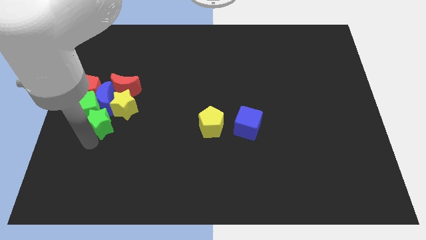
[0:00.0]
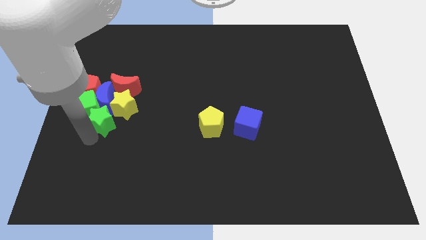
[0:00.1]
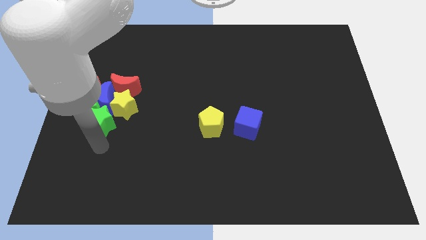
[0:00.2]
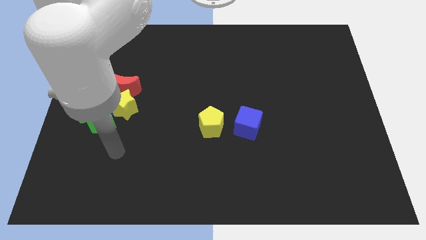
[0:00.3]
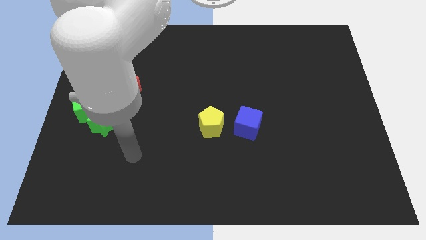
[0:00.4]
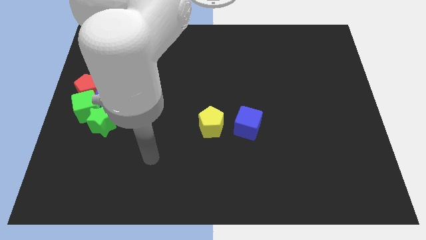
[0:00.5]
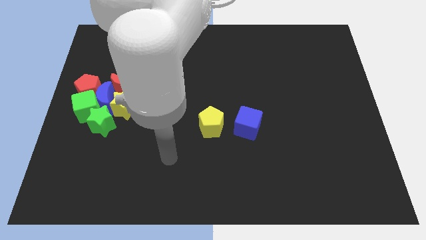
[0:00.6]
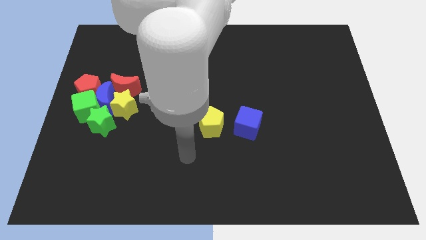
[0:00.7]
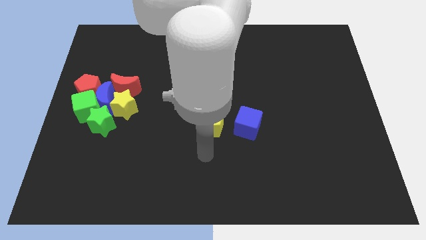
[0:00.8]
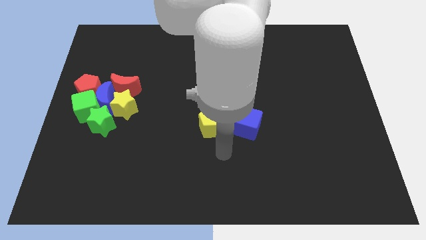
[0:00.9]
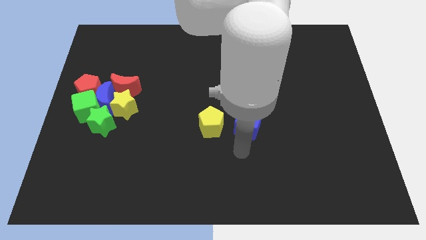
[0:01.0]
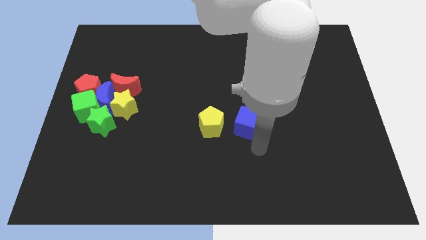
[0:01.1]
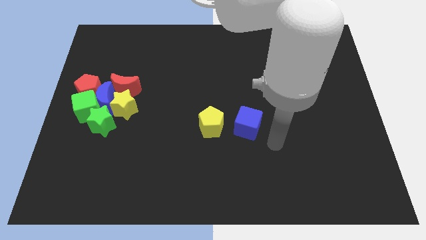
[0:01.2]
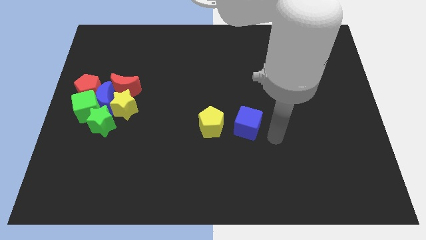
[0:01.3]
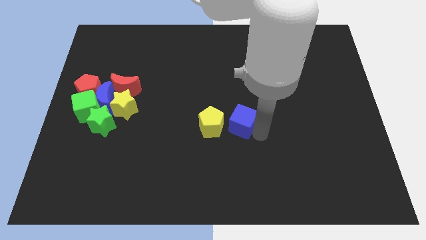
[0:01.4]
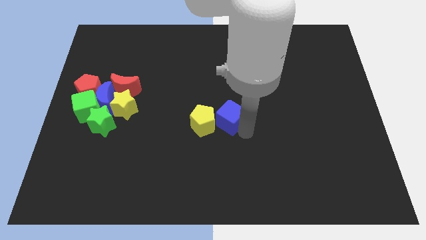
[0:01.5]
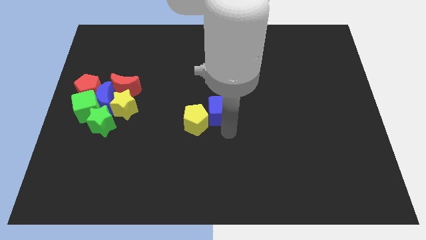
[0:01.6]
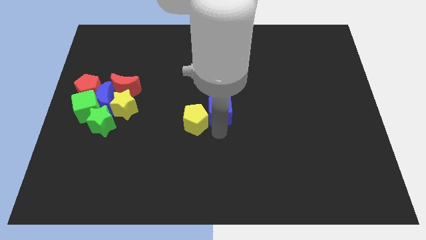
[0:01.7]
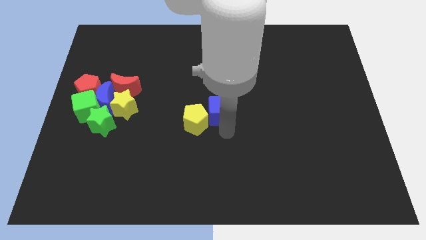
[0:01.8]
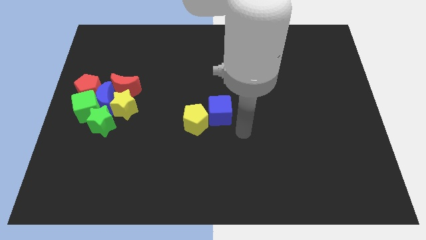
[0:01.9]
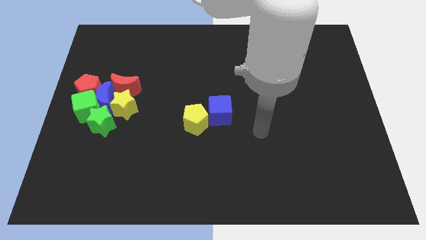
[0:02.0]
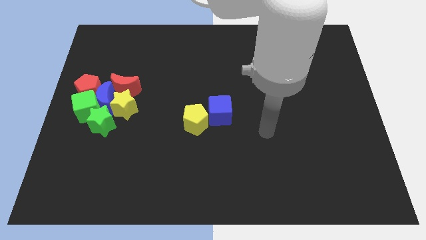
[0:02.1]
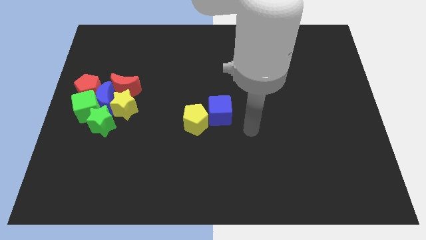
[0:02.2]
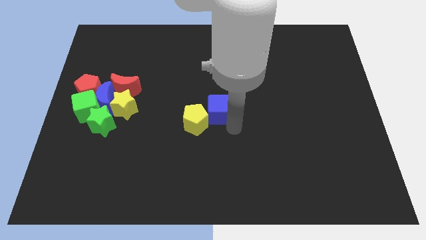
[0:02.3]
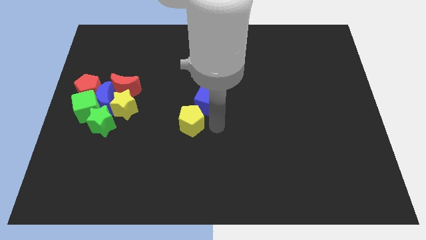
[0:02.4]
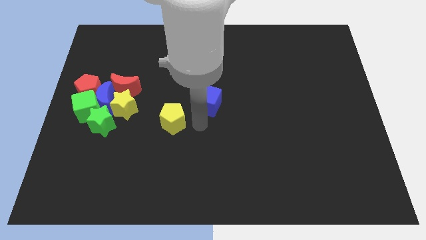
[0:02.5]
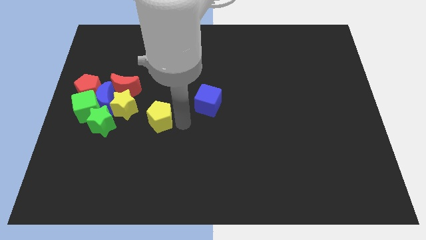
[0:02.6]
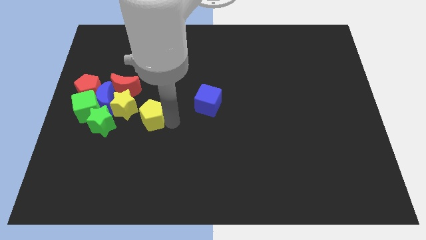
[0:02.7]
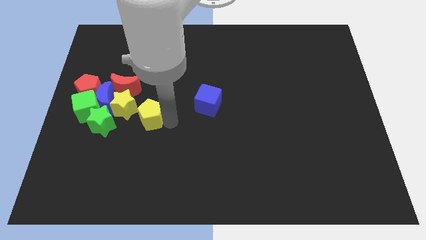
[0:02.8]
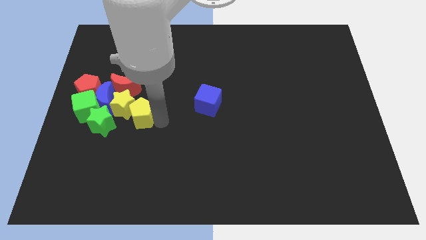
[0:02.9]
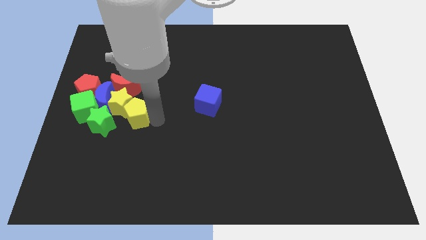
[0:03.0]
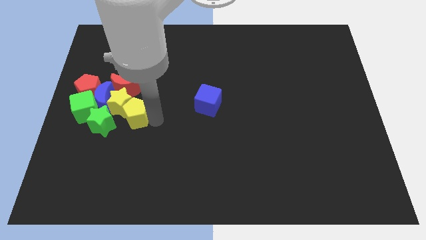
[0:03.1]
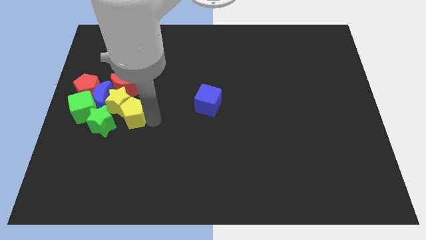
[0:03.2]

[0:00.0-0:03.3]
move your arm away from the green star

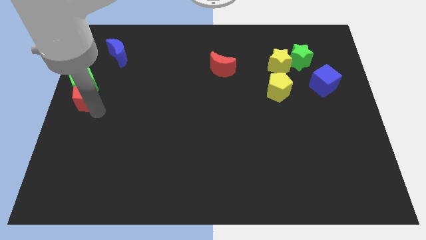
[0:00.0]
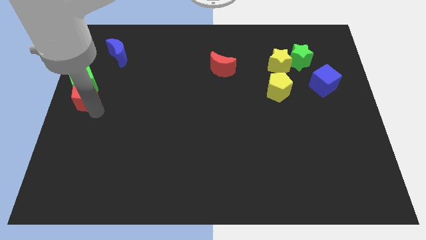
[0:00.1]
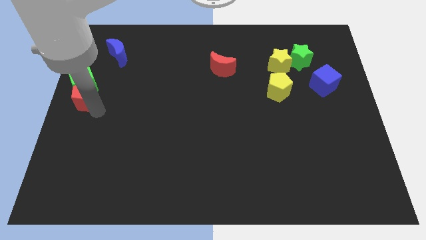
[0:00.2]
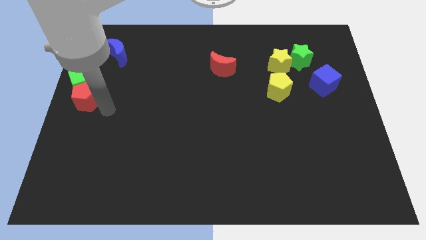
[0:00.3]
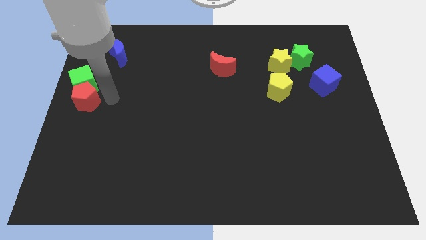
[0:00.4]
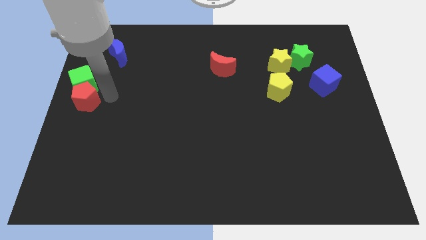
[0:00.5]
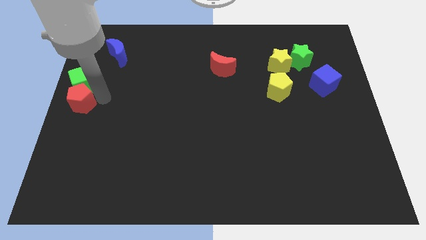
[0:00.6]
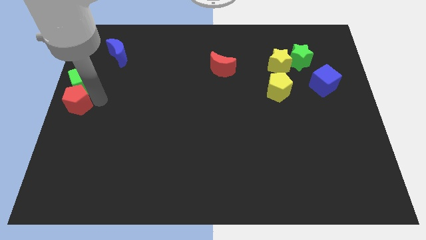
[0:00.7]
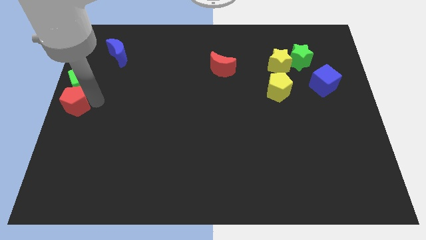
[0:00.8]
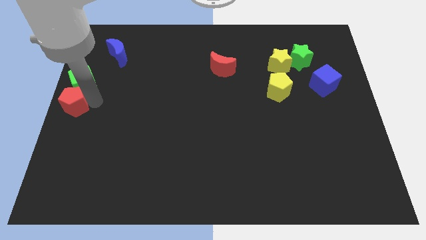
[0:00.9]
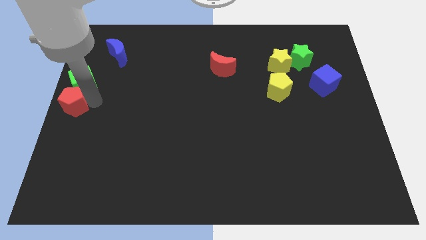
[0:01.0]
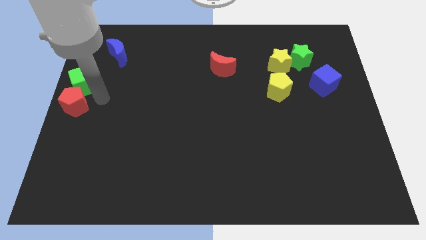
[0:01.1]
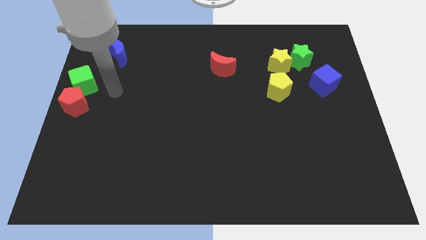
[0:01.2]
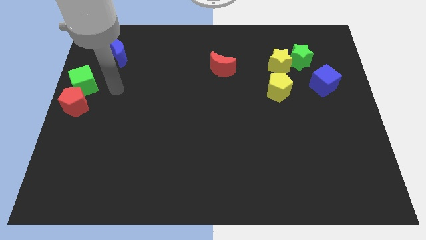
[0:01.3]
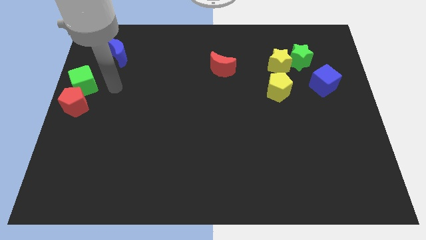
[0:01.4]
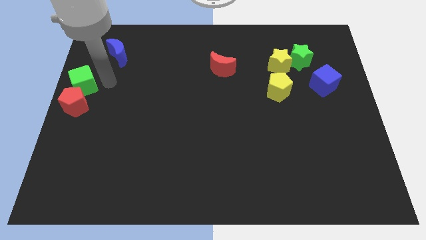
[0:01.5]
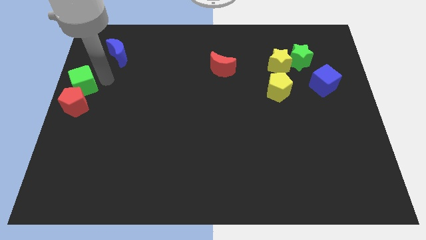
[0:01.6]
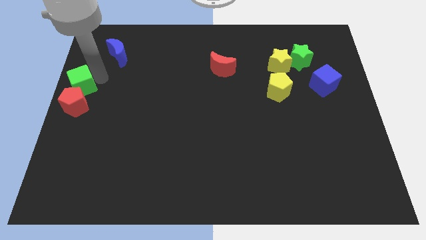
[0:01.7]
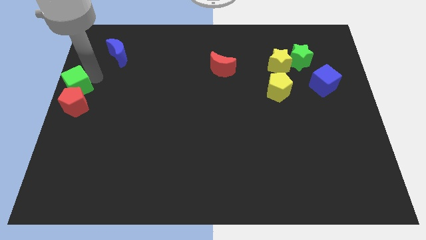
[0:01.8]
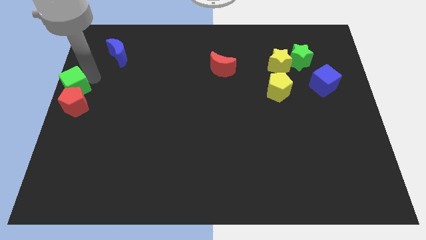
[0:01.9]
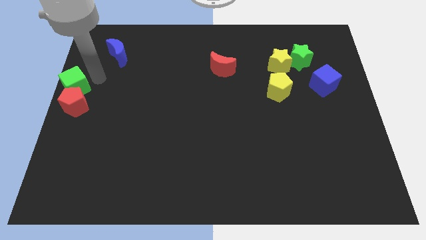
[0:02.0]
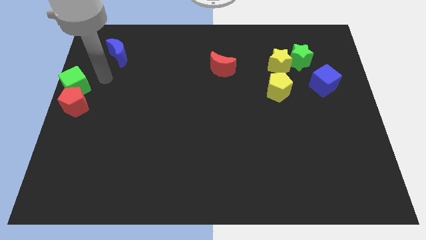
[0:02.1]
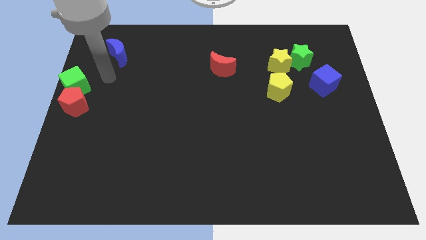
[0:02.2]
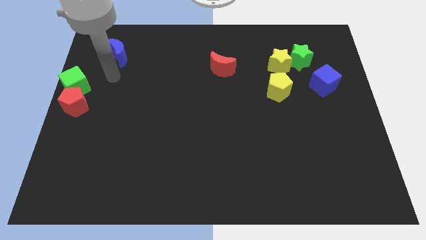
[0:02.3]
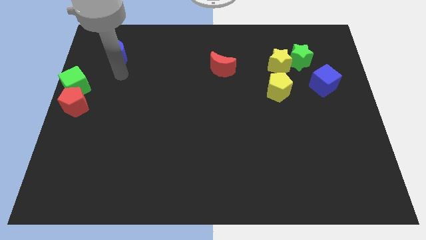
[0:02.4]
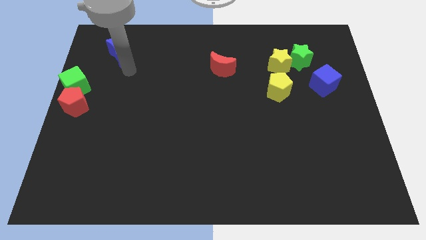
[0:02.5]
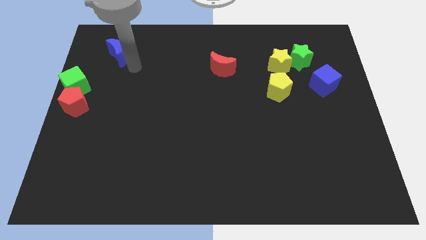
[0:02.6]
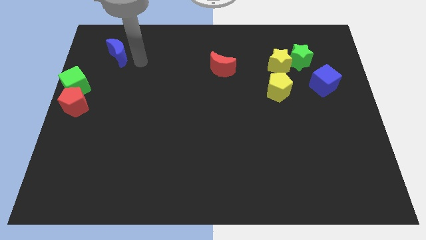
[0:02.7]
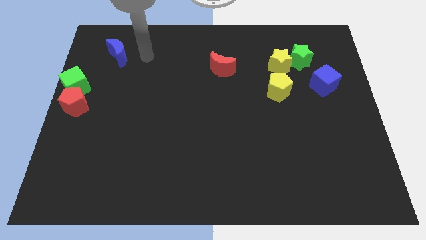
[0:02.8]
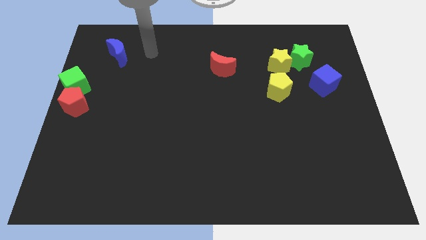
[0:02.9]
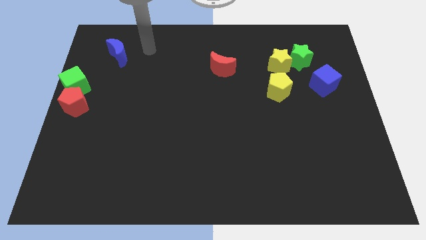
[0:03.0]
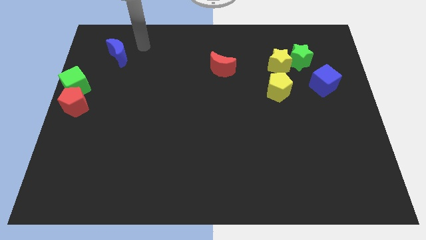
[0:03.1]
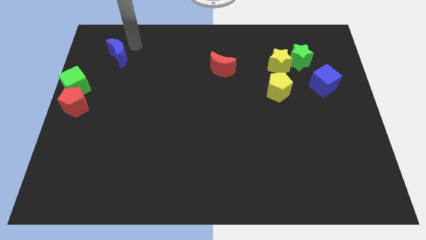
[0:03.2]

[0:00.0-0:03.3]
move the green cube and red pentagon to the left of the board

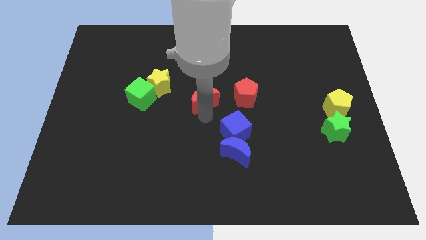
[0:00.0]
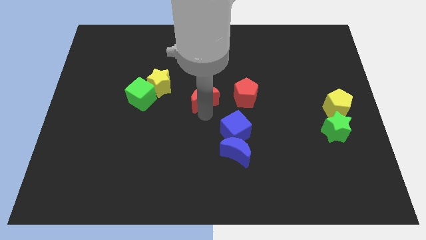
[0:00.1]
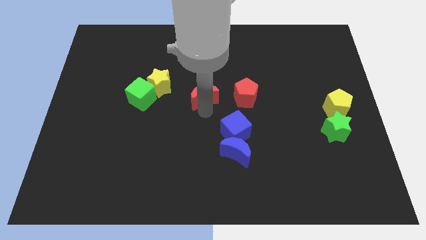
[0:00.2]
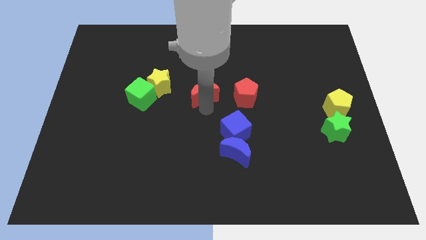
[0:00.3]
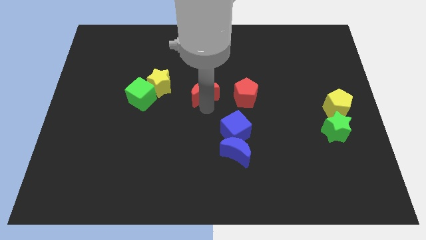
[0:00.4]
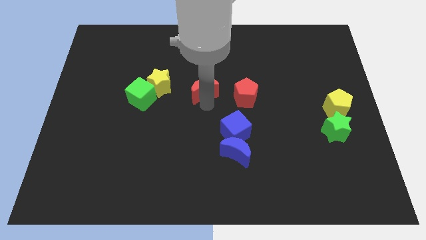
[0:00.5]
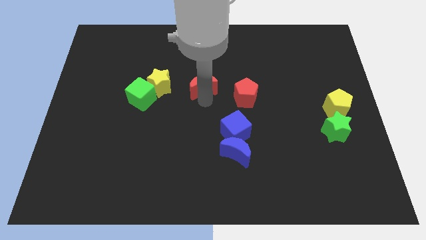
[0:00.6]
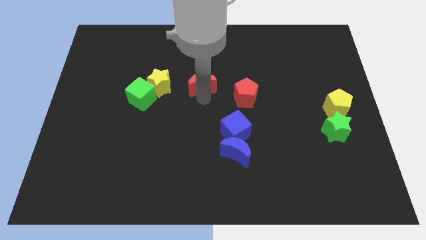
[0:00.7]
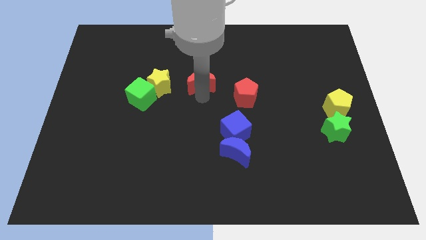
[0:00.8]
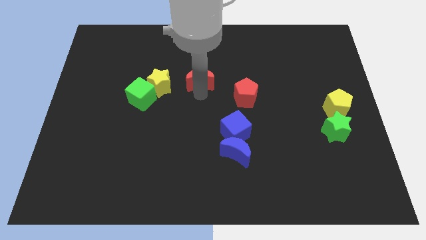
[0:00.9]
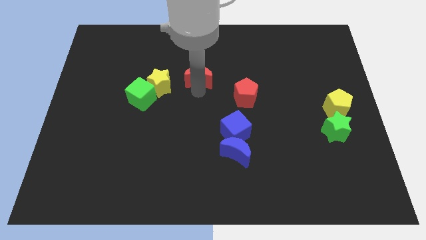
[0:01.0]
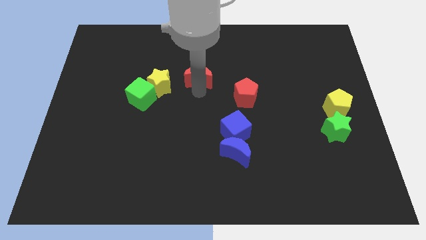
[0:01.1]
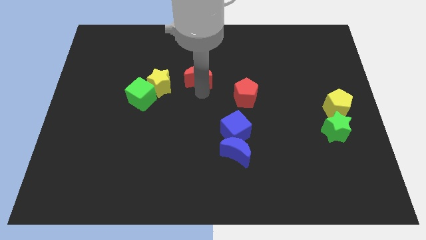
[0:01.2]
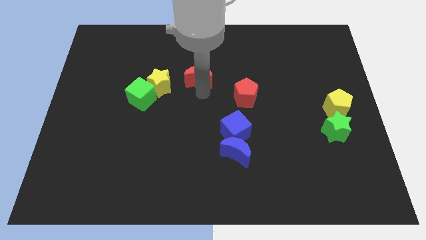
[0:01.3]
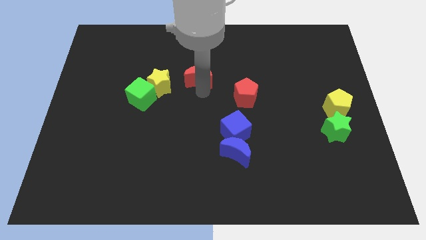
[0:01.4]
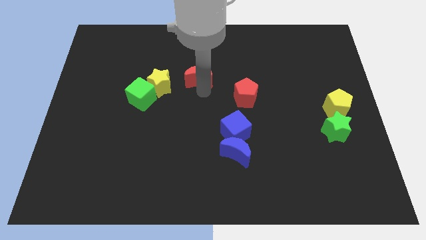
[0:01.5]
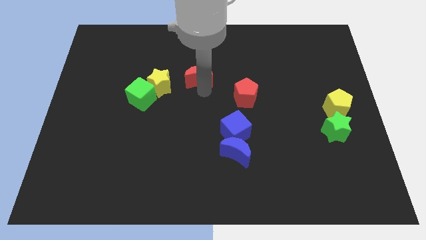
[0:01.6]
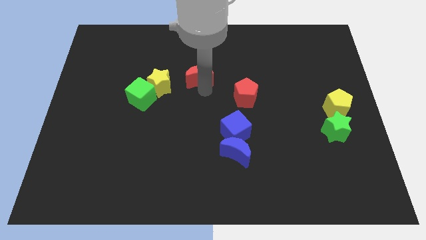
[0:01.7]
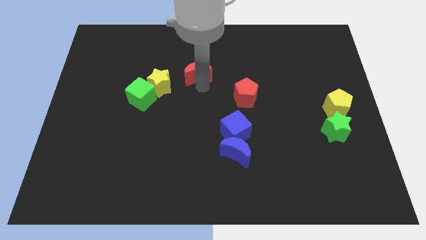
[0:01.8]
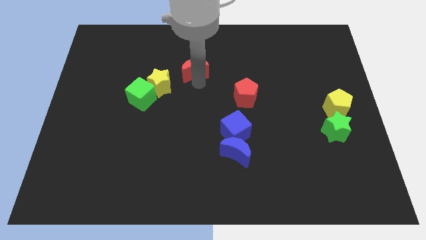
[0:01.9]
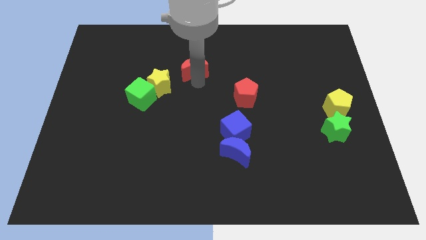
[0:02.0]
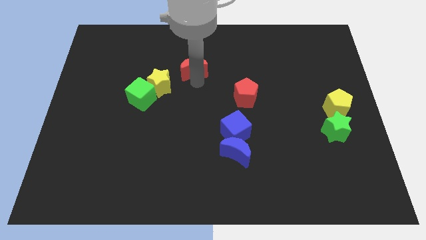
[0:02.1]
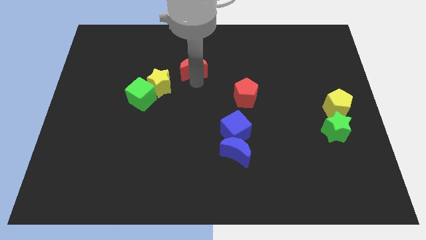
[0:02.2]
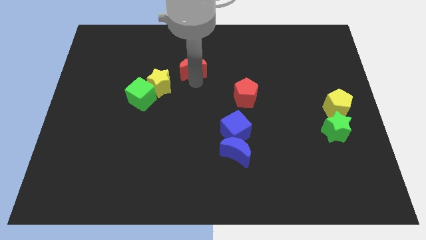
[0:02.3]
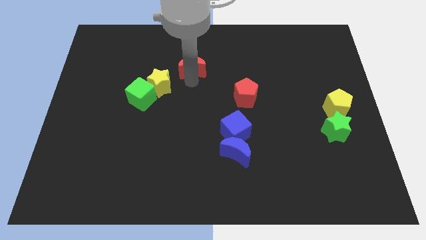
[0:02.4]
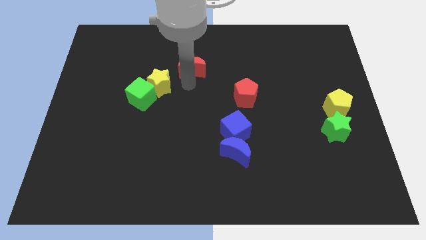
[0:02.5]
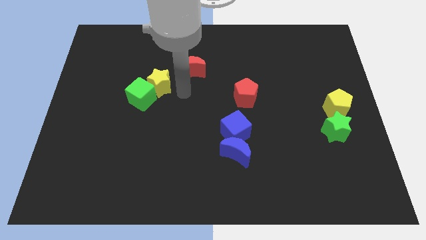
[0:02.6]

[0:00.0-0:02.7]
drag the red crescent to the top
